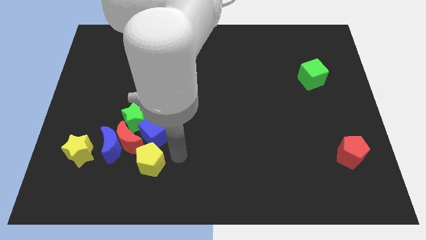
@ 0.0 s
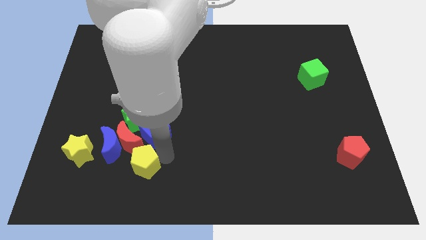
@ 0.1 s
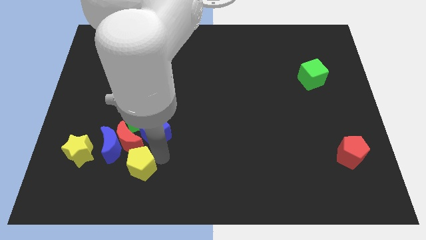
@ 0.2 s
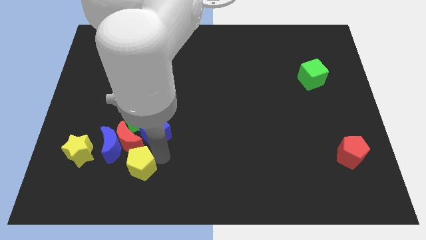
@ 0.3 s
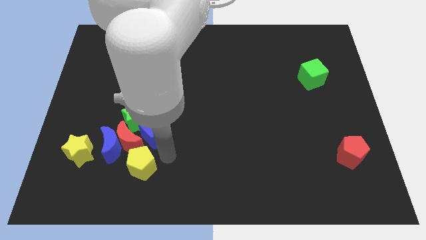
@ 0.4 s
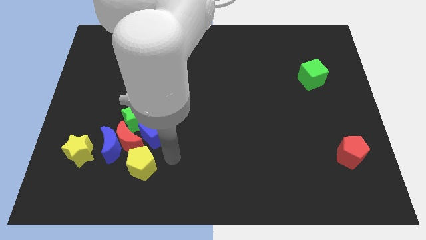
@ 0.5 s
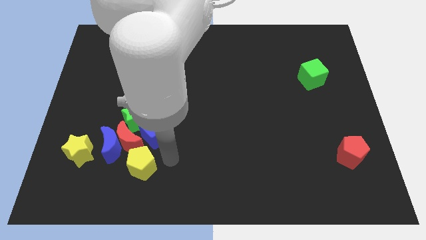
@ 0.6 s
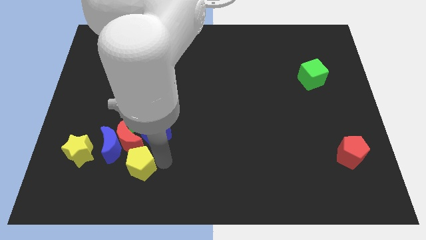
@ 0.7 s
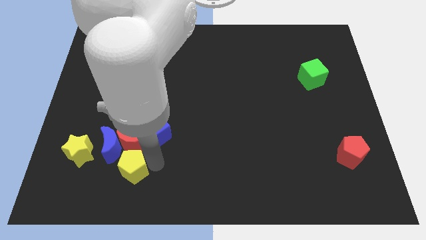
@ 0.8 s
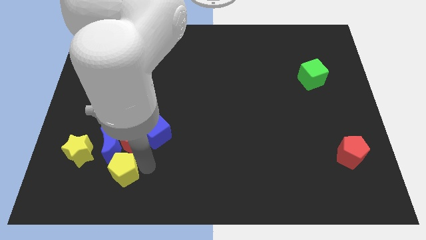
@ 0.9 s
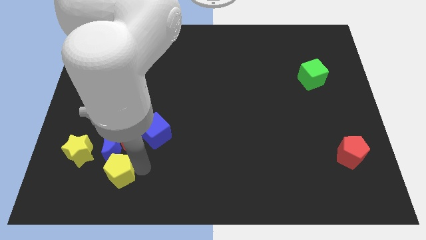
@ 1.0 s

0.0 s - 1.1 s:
separate yellow pentagon from blue cube

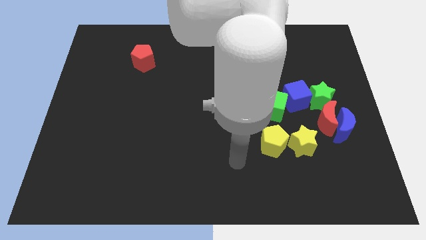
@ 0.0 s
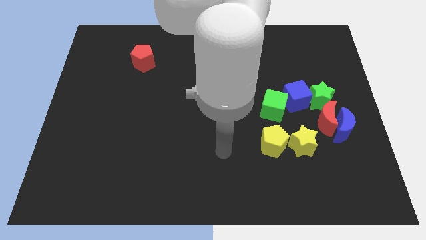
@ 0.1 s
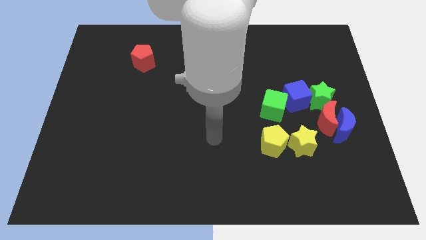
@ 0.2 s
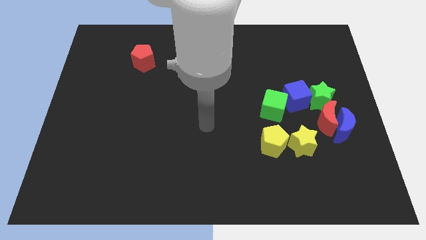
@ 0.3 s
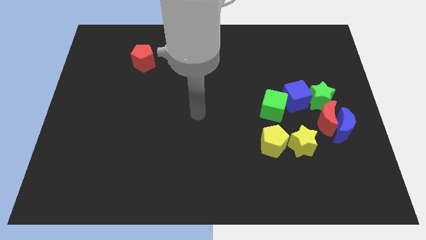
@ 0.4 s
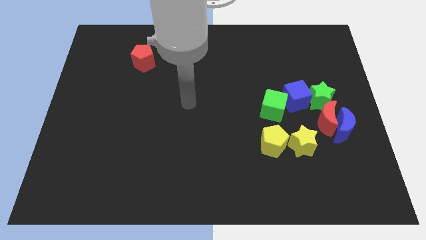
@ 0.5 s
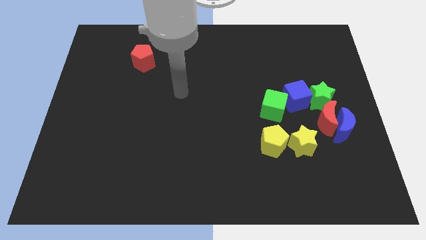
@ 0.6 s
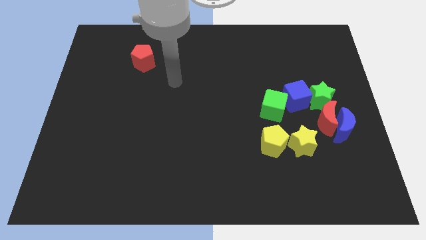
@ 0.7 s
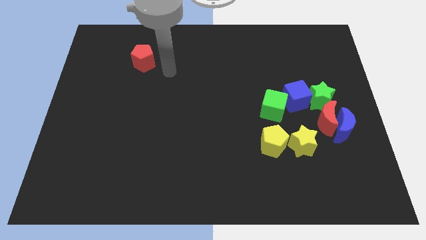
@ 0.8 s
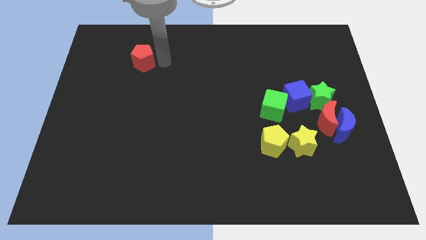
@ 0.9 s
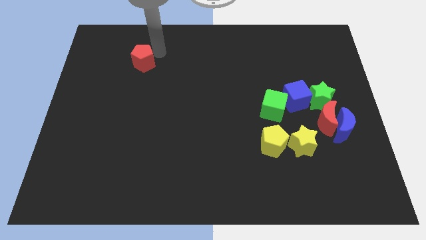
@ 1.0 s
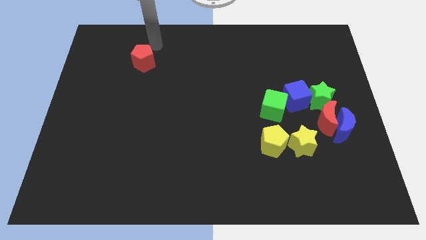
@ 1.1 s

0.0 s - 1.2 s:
move your arm towards red pentagon

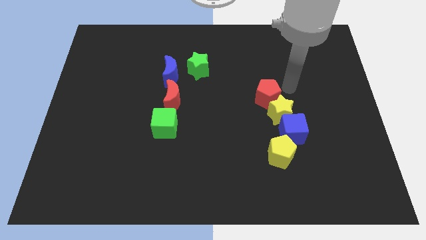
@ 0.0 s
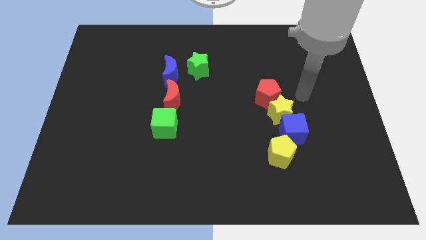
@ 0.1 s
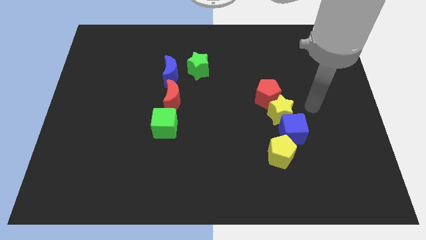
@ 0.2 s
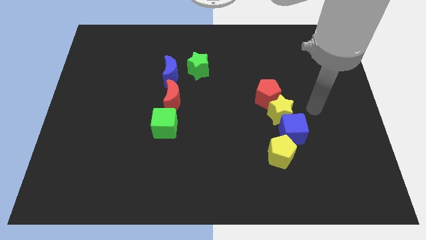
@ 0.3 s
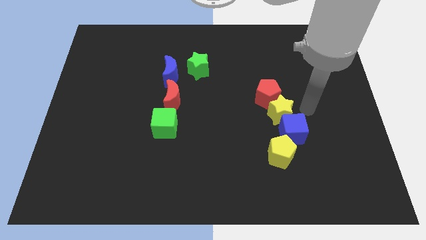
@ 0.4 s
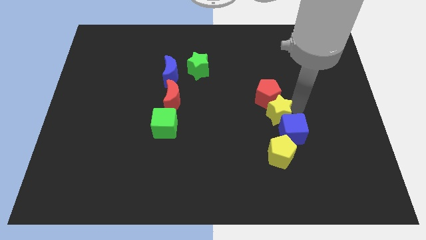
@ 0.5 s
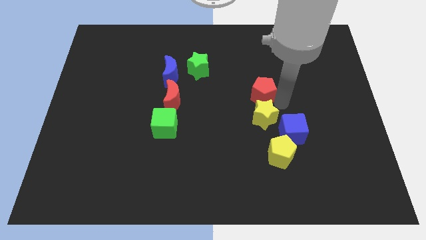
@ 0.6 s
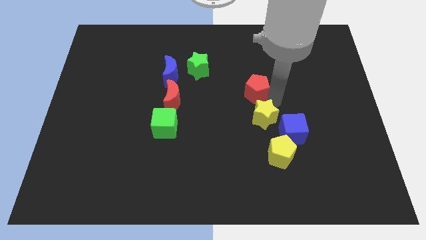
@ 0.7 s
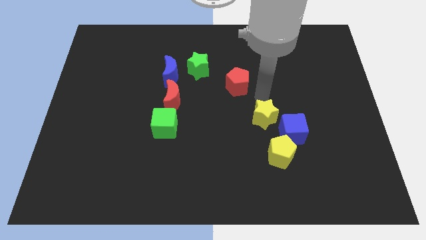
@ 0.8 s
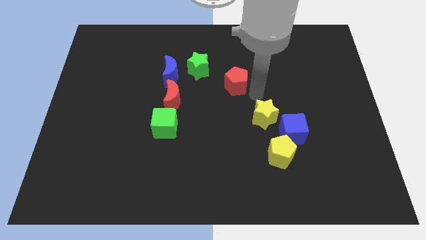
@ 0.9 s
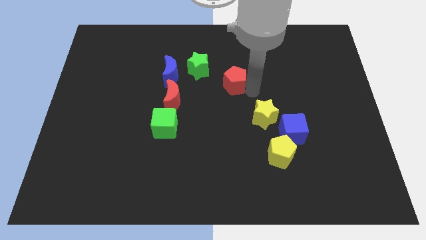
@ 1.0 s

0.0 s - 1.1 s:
separate the red pentagon and yellow star

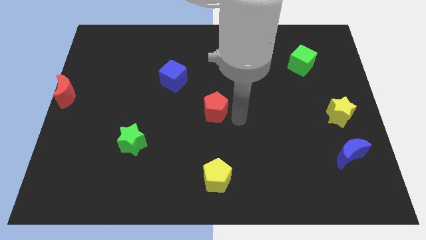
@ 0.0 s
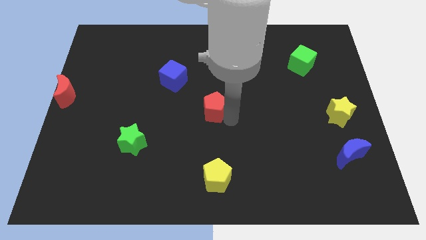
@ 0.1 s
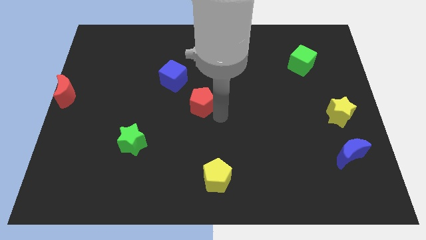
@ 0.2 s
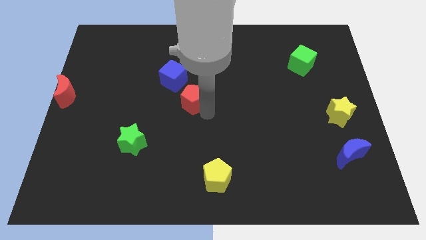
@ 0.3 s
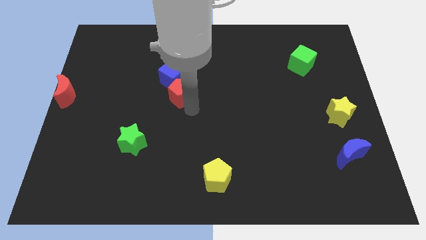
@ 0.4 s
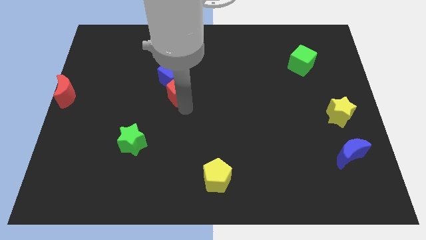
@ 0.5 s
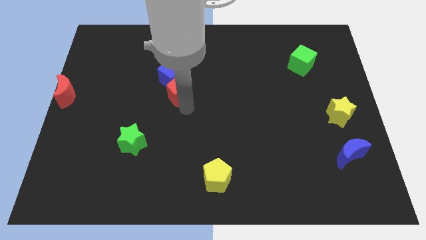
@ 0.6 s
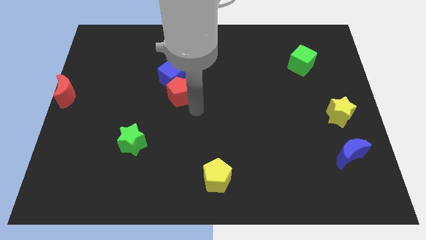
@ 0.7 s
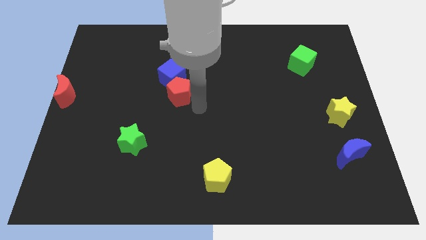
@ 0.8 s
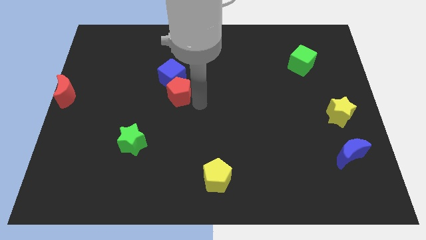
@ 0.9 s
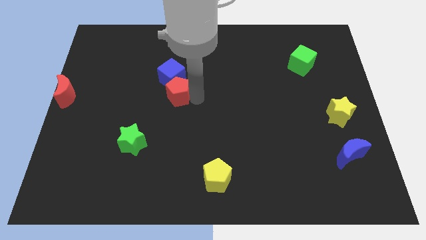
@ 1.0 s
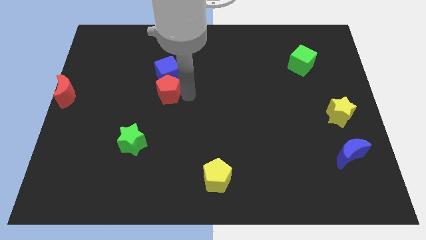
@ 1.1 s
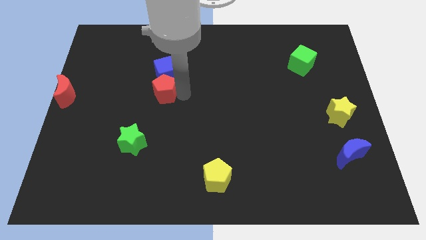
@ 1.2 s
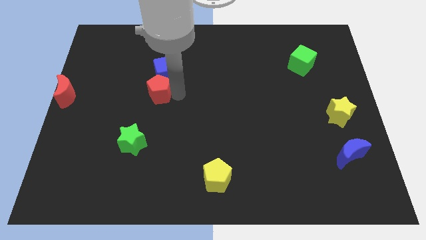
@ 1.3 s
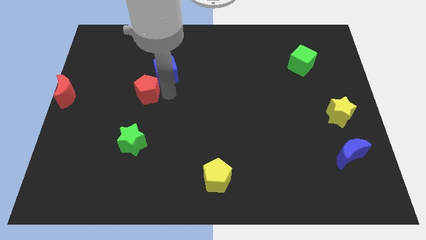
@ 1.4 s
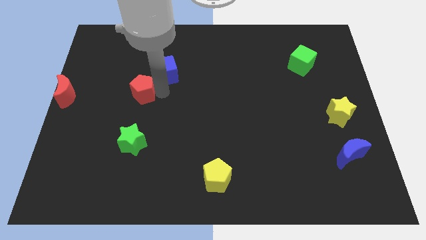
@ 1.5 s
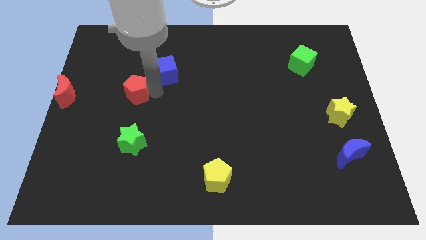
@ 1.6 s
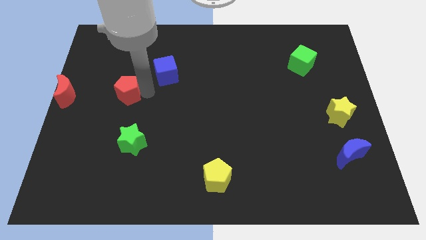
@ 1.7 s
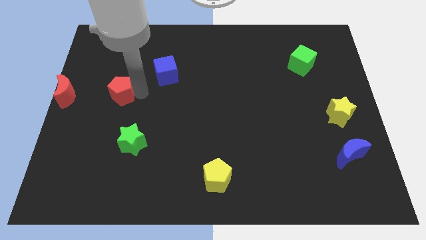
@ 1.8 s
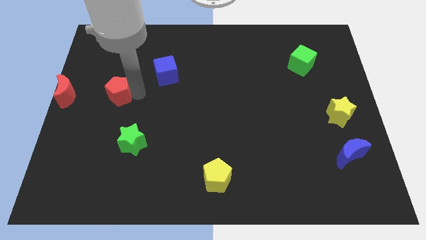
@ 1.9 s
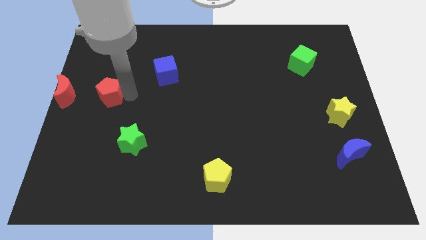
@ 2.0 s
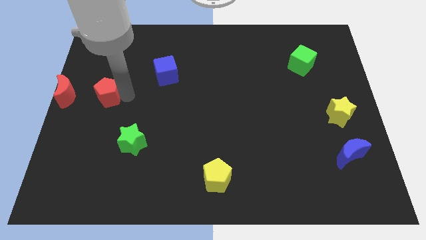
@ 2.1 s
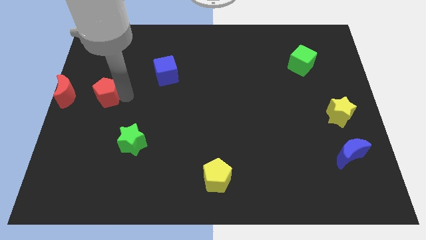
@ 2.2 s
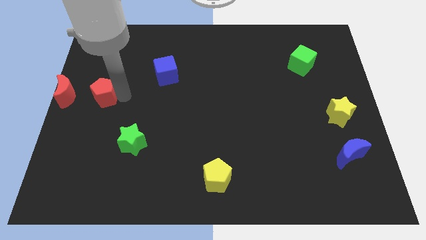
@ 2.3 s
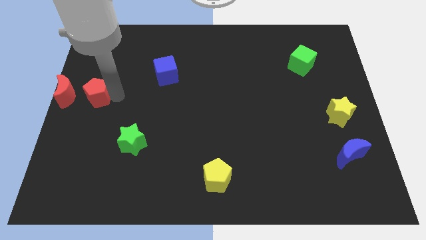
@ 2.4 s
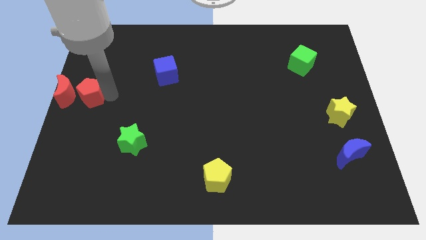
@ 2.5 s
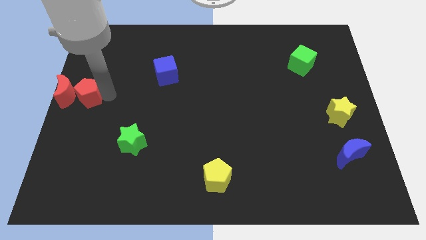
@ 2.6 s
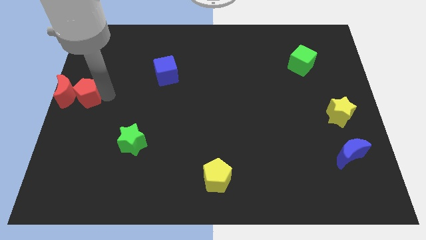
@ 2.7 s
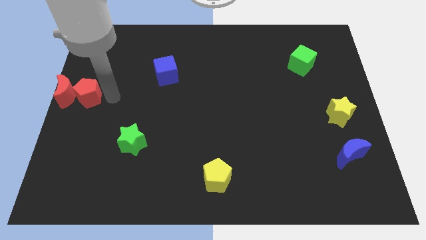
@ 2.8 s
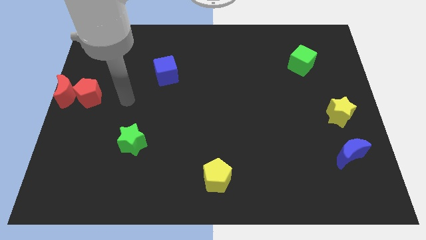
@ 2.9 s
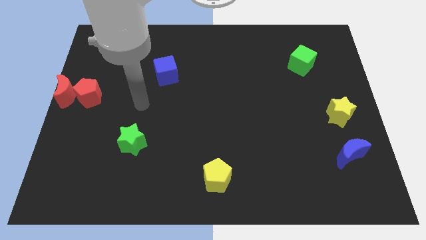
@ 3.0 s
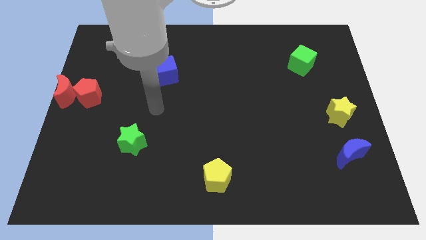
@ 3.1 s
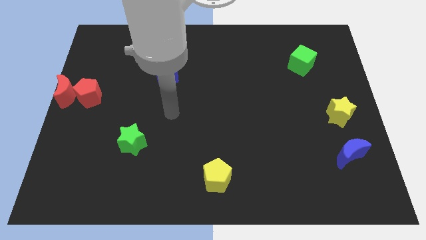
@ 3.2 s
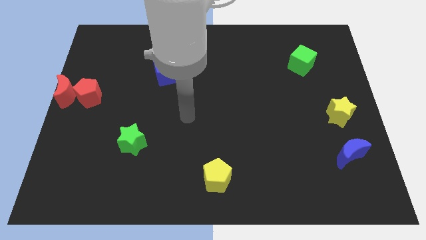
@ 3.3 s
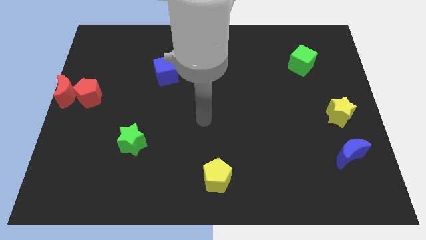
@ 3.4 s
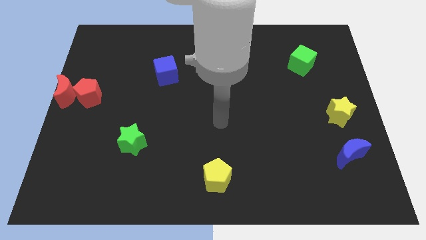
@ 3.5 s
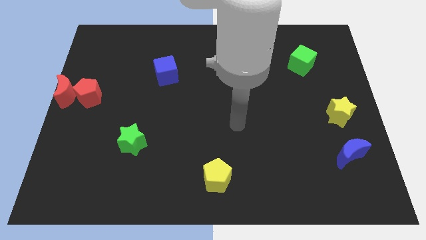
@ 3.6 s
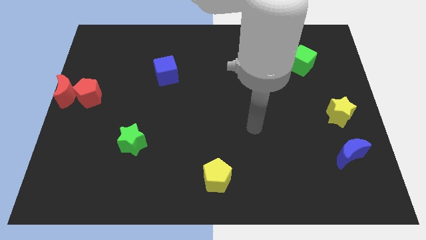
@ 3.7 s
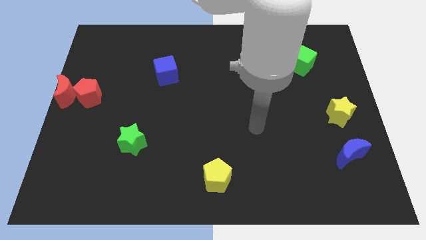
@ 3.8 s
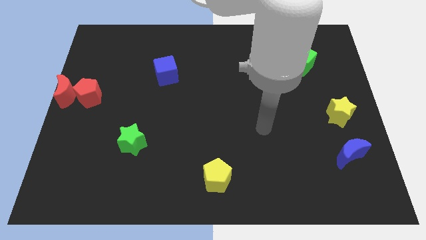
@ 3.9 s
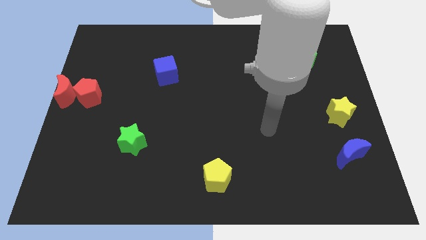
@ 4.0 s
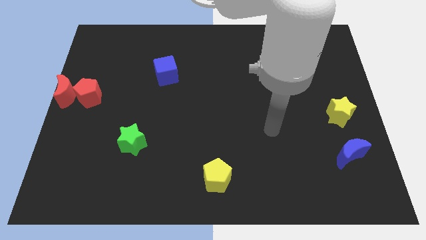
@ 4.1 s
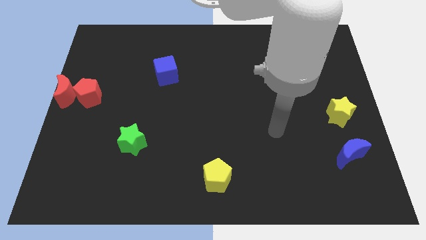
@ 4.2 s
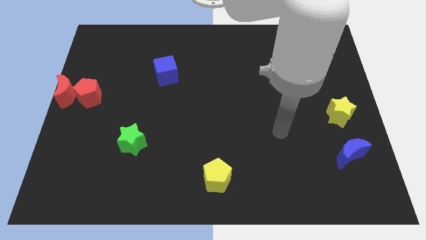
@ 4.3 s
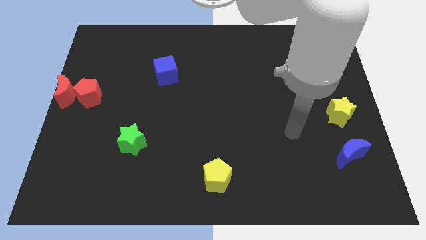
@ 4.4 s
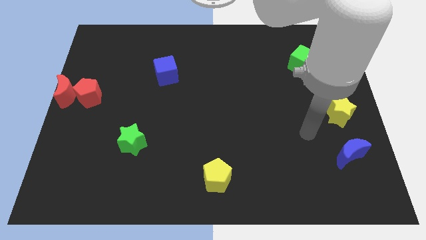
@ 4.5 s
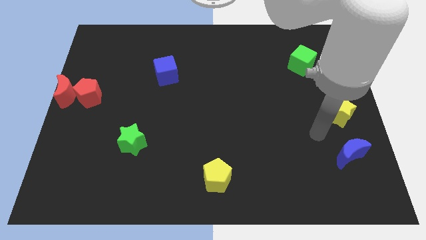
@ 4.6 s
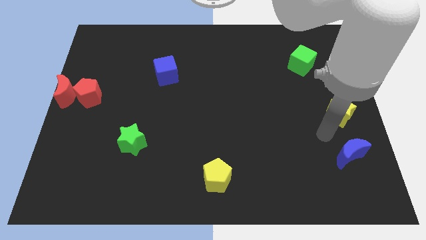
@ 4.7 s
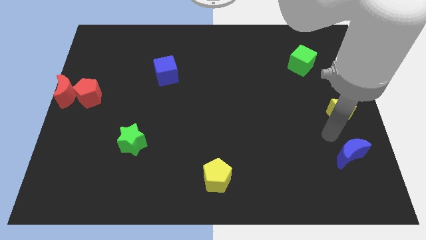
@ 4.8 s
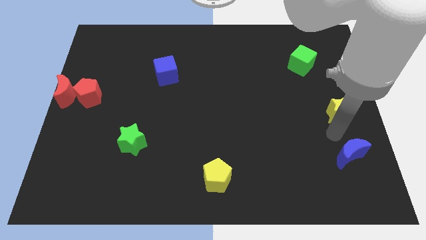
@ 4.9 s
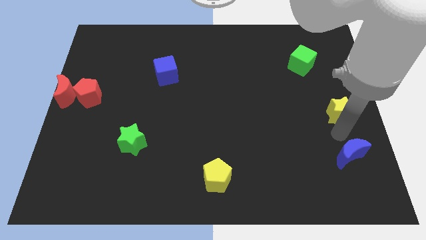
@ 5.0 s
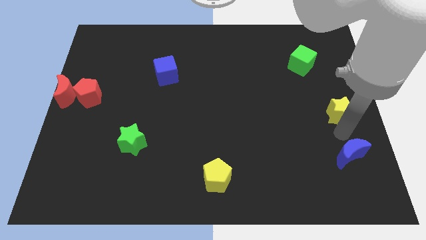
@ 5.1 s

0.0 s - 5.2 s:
move red pentagon to the left of red crescent

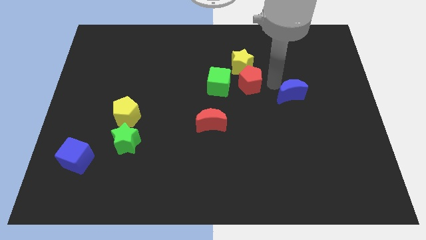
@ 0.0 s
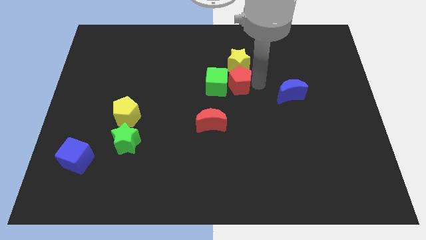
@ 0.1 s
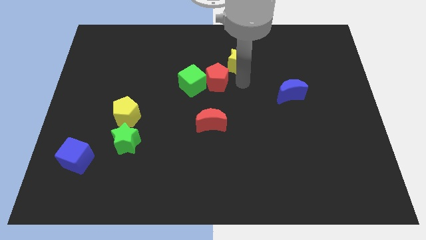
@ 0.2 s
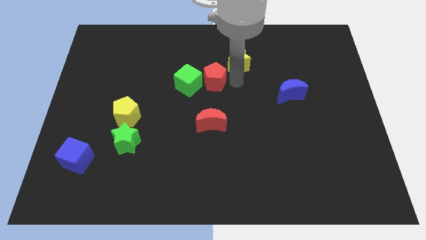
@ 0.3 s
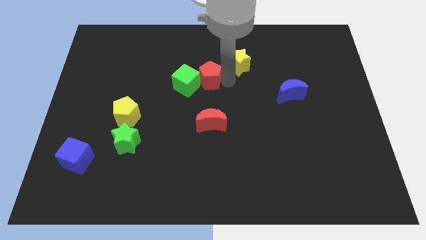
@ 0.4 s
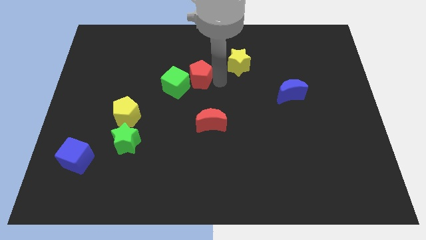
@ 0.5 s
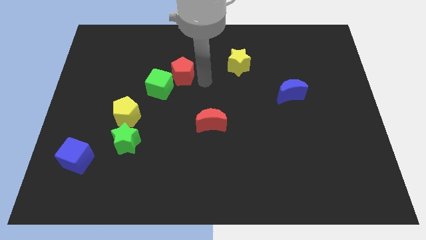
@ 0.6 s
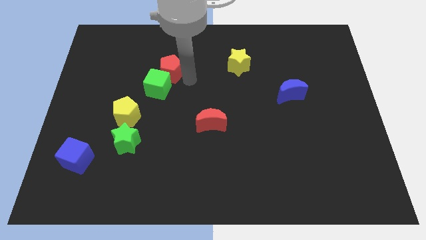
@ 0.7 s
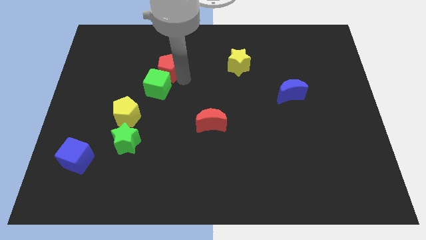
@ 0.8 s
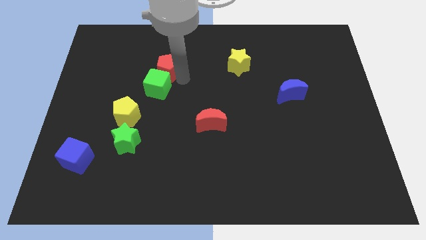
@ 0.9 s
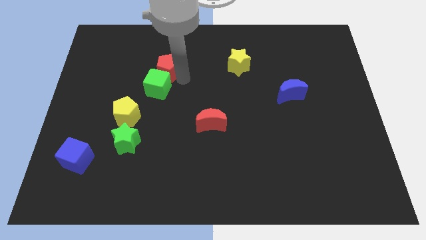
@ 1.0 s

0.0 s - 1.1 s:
push the red pentagon and green cube to the left side of the board
